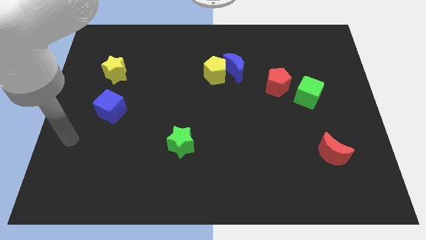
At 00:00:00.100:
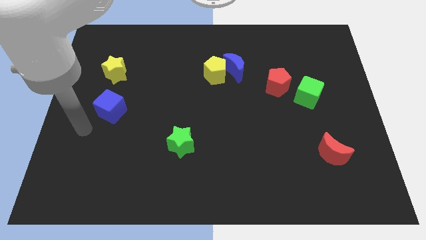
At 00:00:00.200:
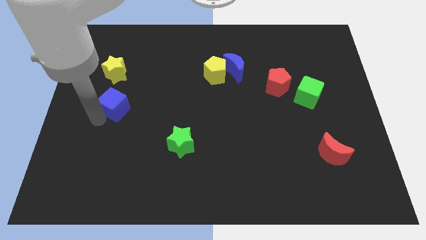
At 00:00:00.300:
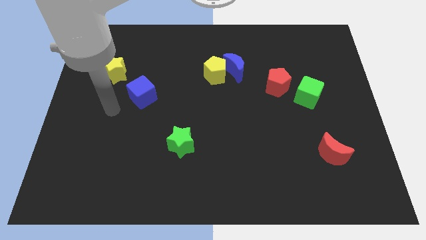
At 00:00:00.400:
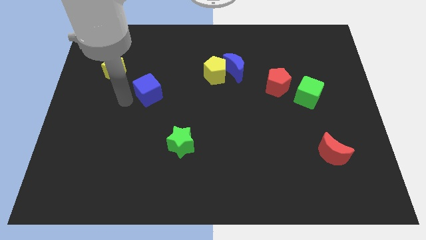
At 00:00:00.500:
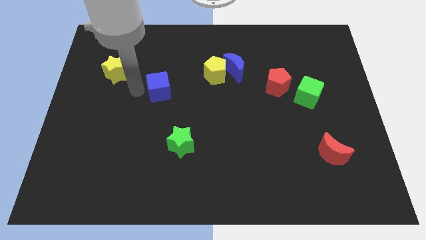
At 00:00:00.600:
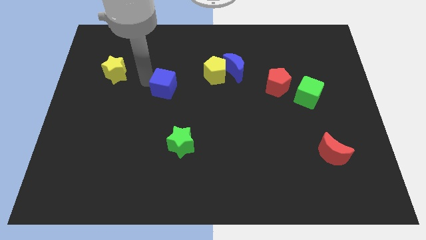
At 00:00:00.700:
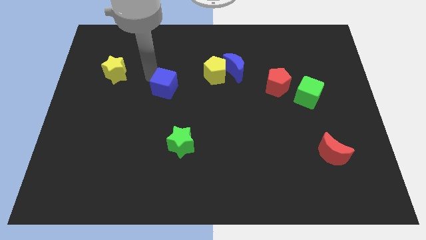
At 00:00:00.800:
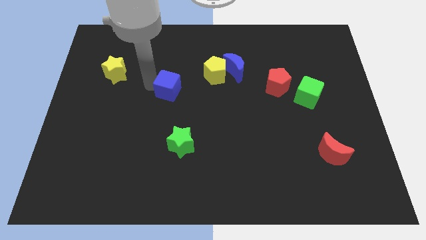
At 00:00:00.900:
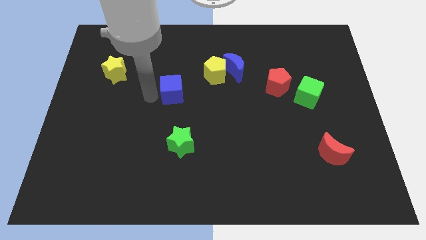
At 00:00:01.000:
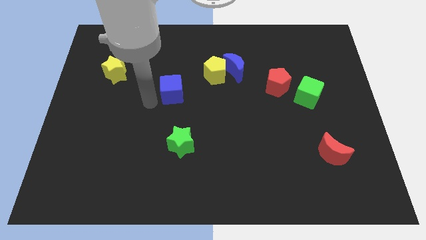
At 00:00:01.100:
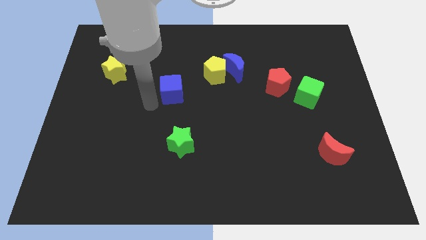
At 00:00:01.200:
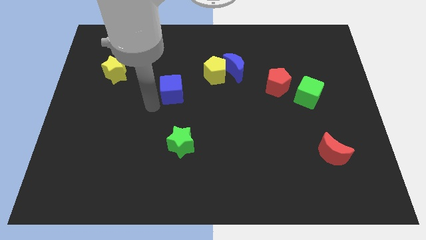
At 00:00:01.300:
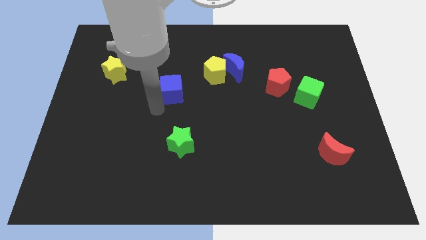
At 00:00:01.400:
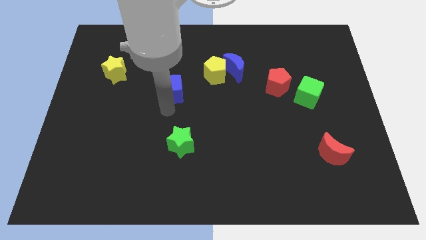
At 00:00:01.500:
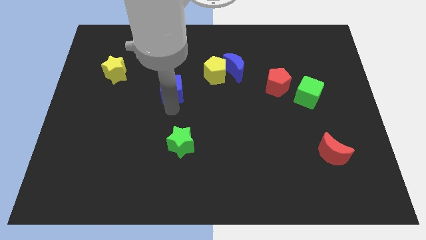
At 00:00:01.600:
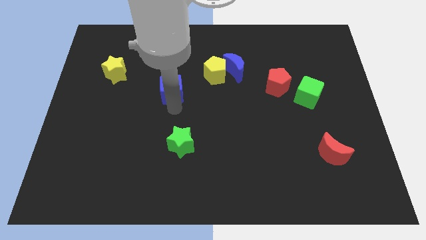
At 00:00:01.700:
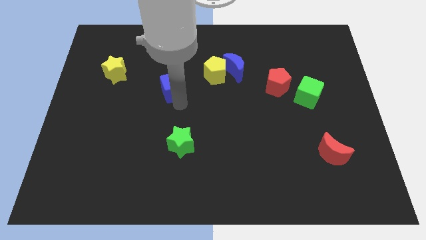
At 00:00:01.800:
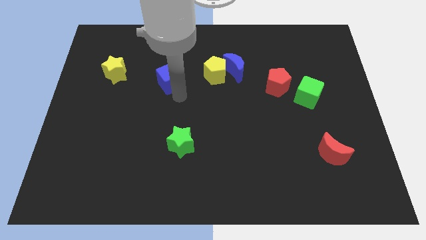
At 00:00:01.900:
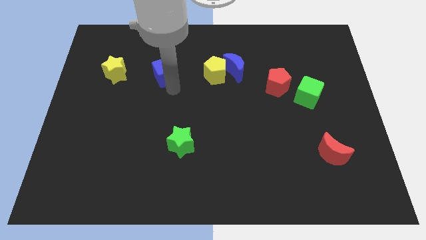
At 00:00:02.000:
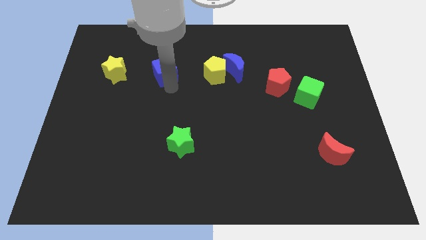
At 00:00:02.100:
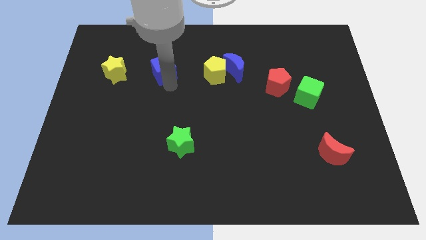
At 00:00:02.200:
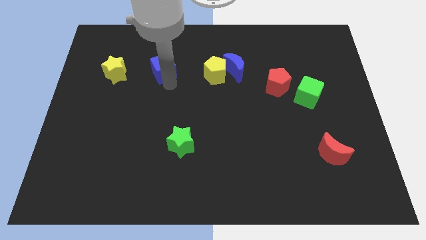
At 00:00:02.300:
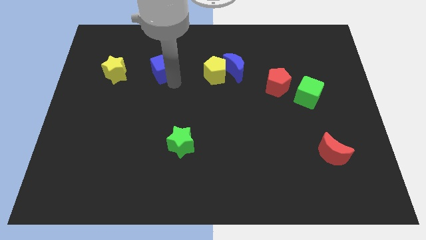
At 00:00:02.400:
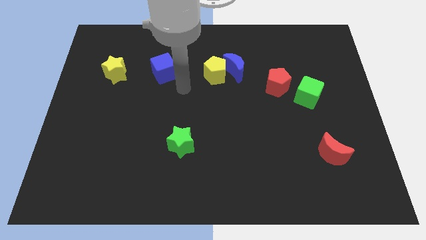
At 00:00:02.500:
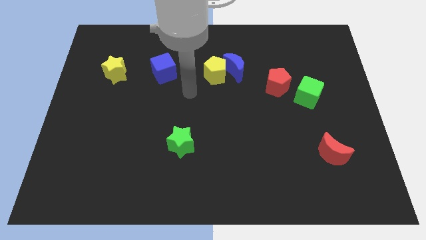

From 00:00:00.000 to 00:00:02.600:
place the blue cube in between yellow star and yellow pentagon

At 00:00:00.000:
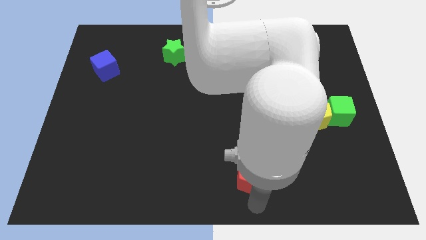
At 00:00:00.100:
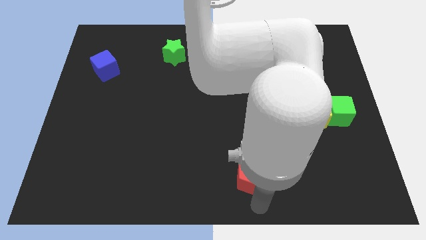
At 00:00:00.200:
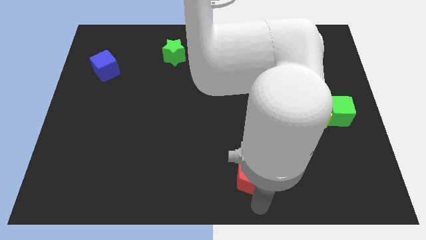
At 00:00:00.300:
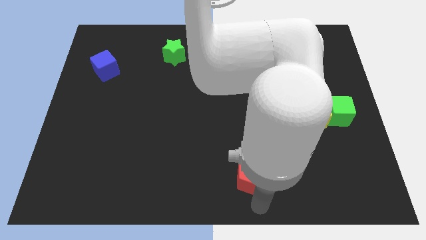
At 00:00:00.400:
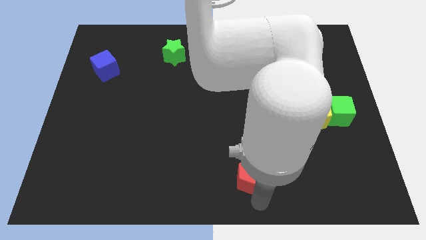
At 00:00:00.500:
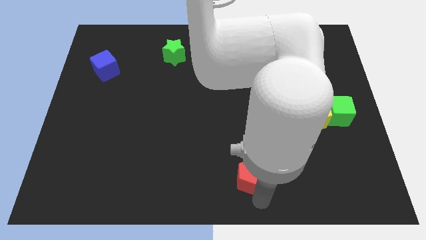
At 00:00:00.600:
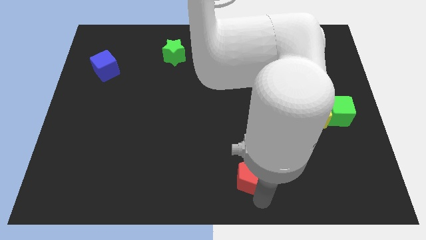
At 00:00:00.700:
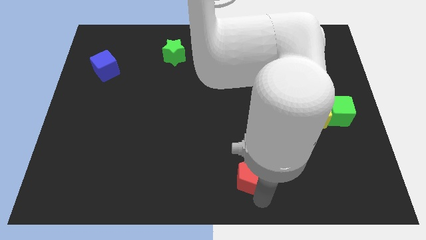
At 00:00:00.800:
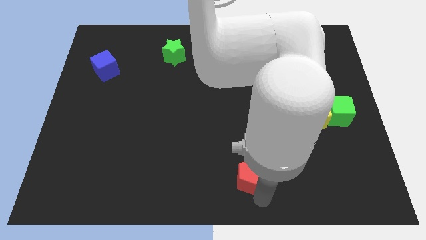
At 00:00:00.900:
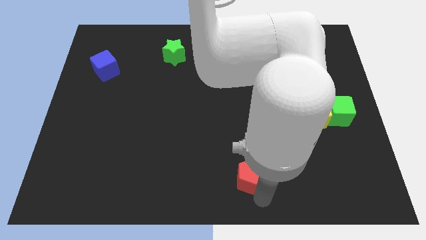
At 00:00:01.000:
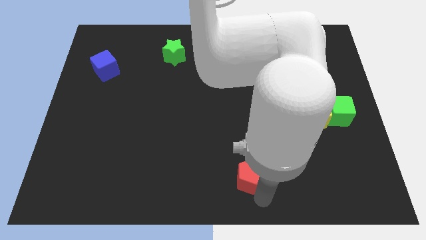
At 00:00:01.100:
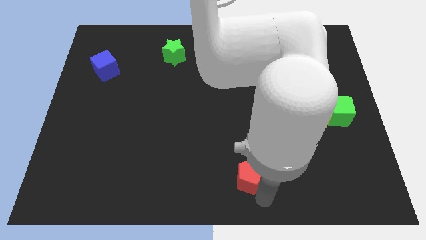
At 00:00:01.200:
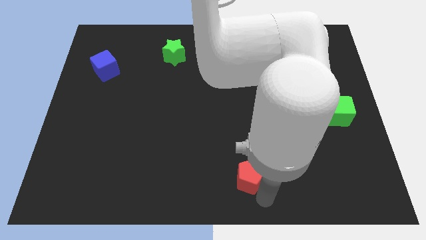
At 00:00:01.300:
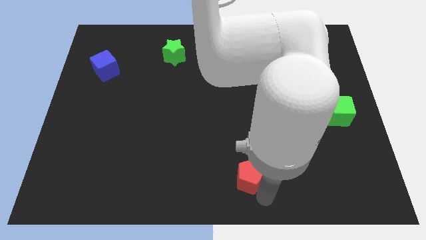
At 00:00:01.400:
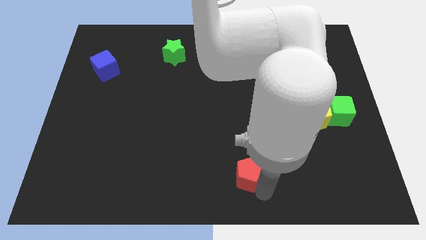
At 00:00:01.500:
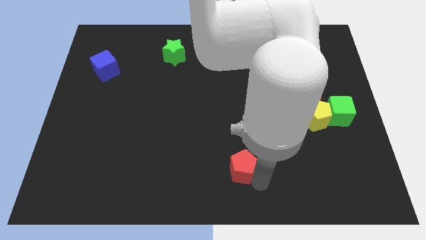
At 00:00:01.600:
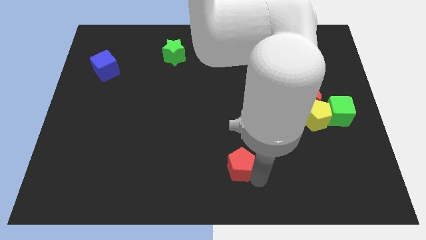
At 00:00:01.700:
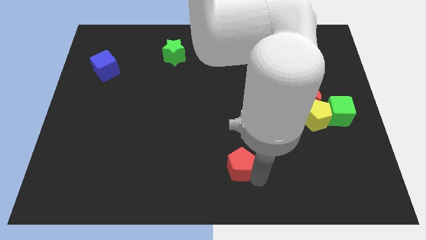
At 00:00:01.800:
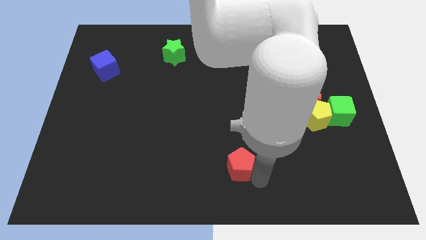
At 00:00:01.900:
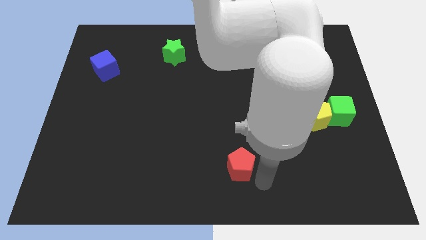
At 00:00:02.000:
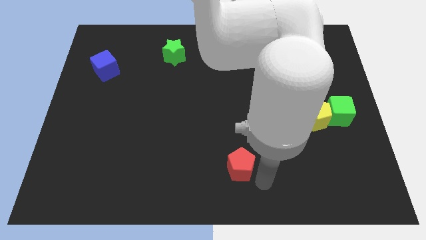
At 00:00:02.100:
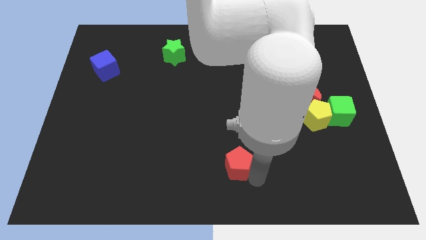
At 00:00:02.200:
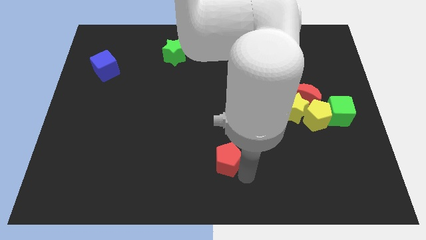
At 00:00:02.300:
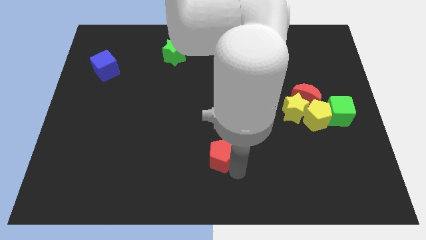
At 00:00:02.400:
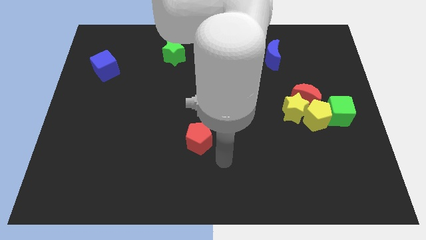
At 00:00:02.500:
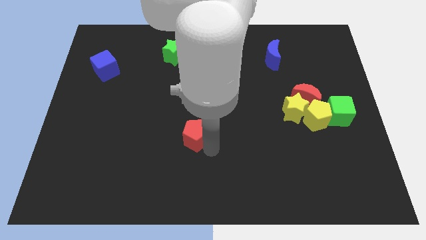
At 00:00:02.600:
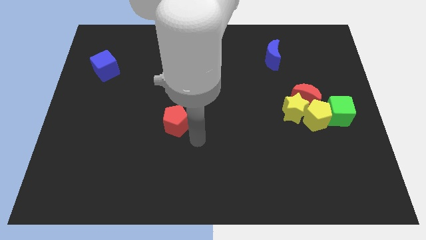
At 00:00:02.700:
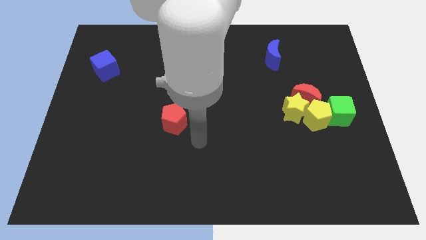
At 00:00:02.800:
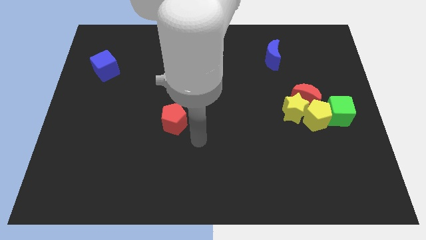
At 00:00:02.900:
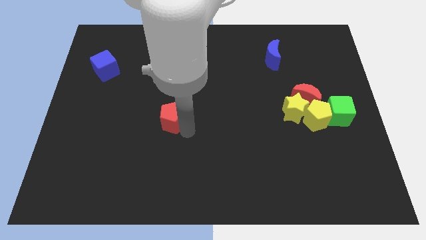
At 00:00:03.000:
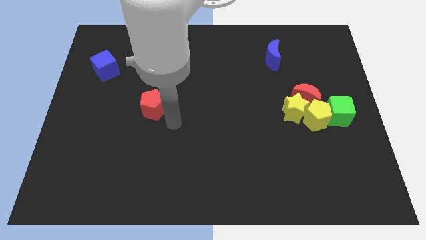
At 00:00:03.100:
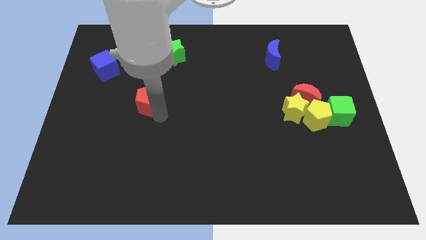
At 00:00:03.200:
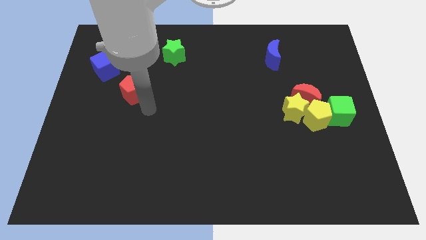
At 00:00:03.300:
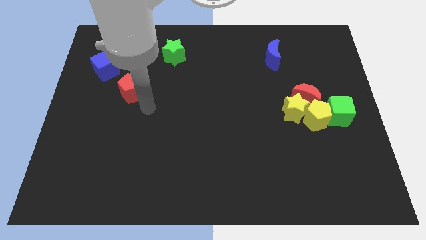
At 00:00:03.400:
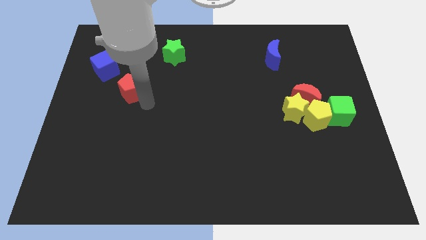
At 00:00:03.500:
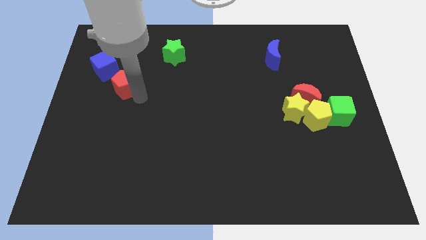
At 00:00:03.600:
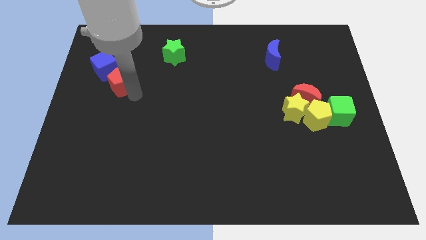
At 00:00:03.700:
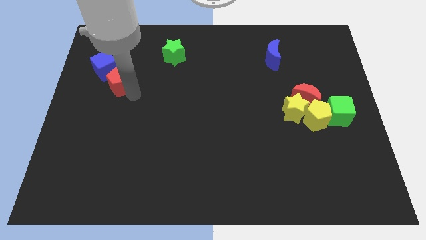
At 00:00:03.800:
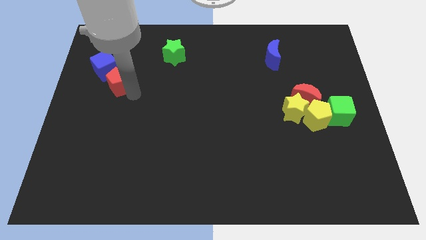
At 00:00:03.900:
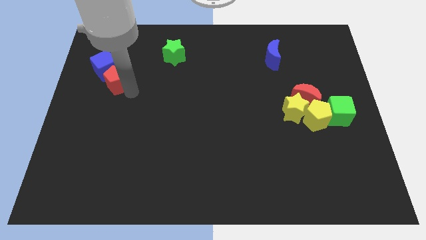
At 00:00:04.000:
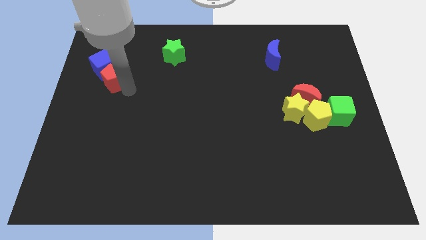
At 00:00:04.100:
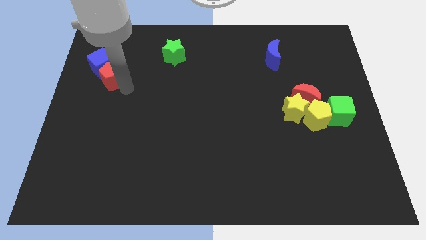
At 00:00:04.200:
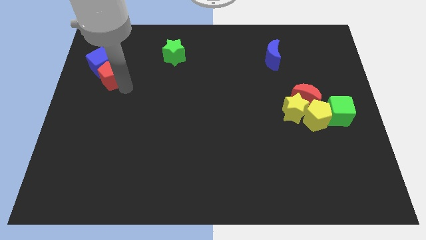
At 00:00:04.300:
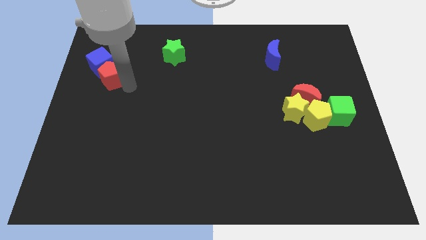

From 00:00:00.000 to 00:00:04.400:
push the red pentagon into the blue cube

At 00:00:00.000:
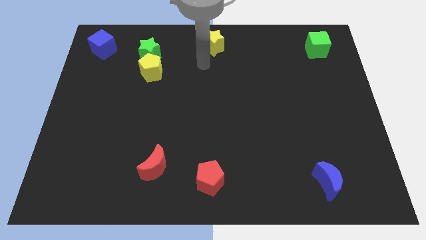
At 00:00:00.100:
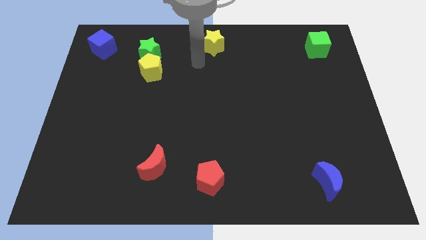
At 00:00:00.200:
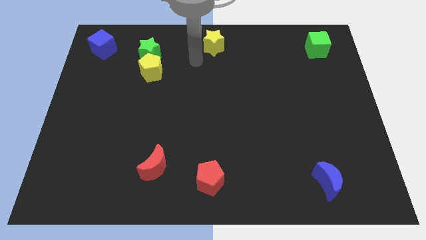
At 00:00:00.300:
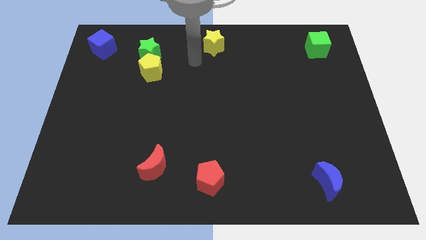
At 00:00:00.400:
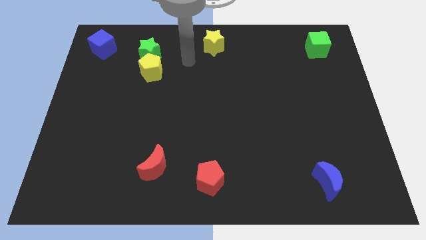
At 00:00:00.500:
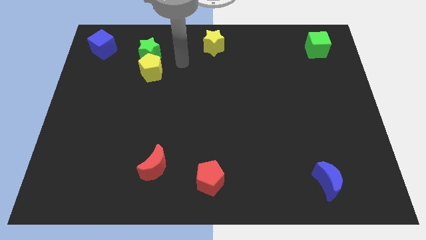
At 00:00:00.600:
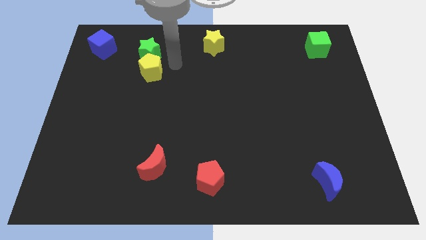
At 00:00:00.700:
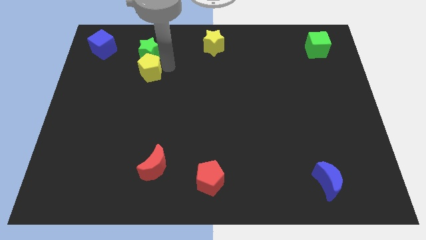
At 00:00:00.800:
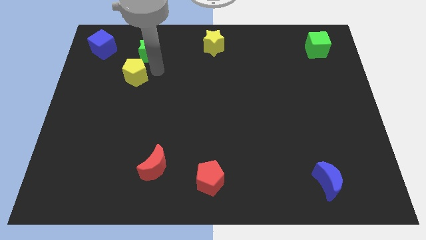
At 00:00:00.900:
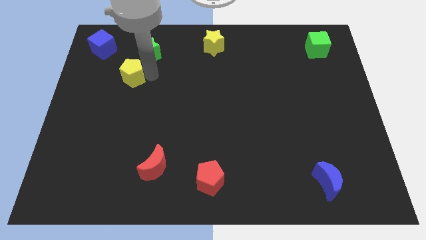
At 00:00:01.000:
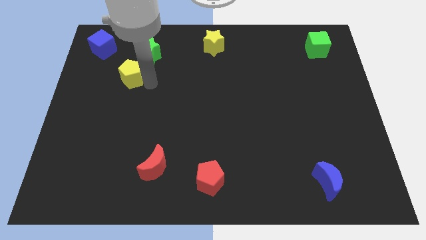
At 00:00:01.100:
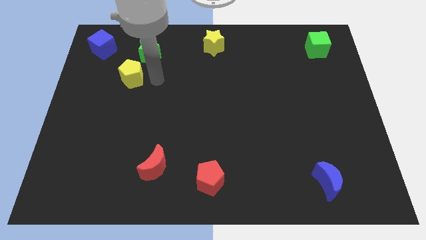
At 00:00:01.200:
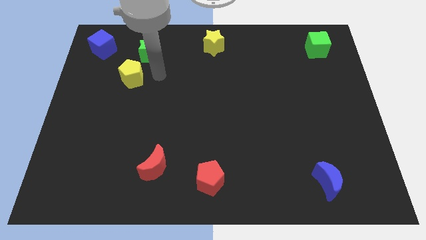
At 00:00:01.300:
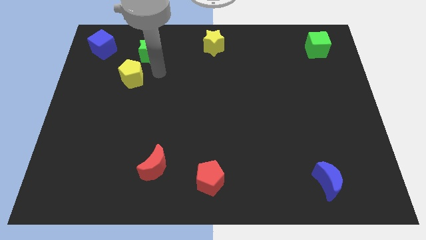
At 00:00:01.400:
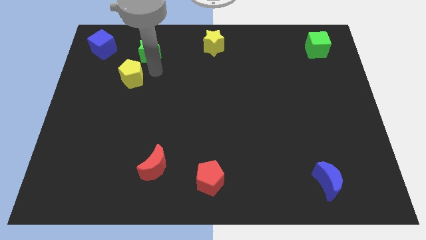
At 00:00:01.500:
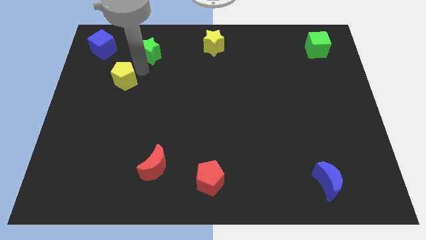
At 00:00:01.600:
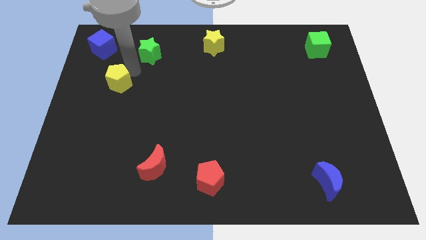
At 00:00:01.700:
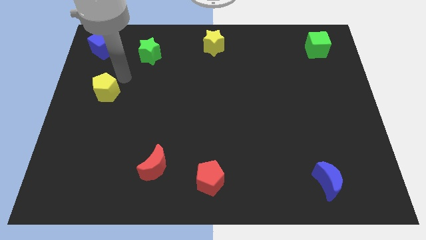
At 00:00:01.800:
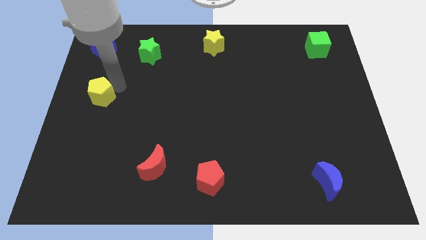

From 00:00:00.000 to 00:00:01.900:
separate the yellow pentagon from the green star
